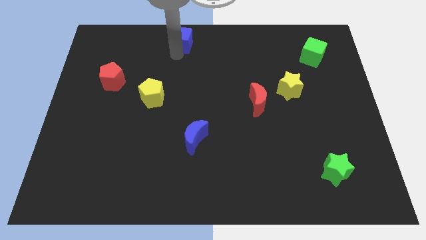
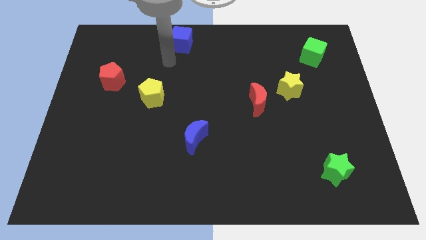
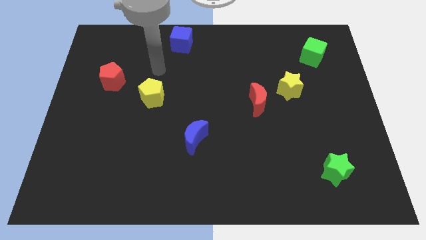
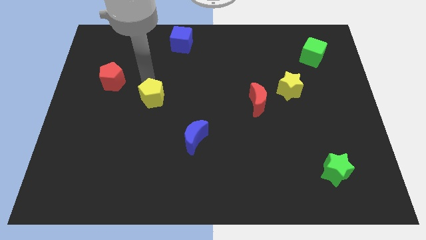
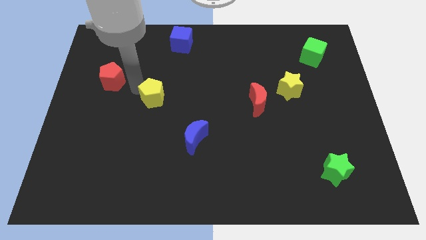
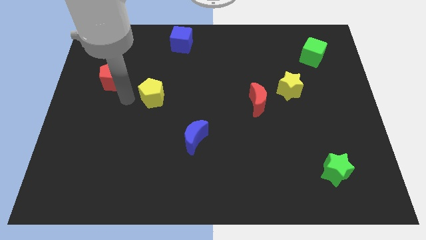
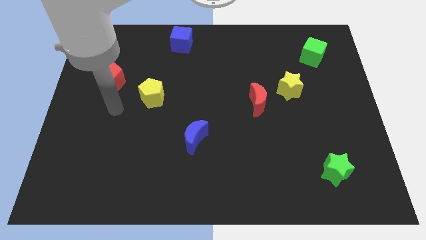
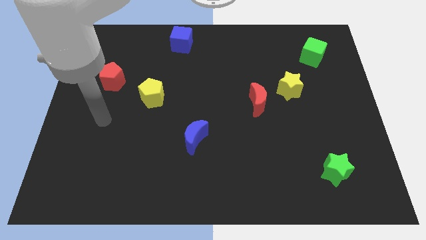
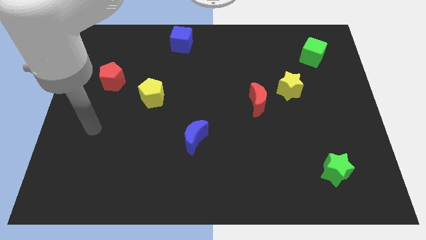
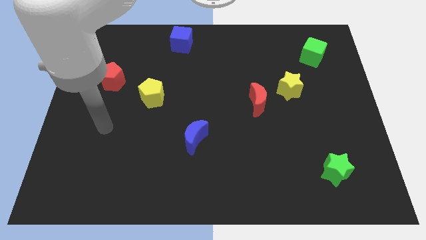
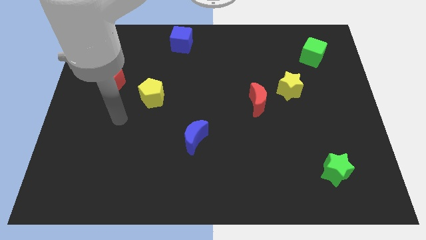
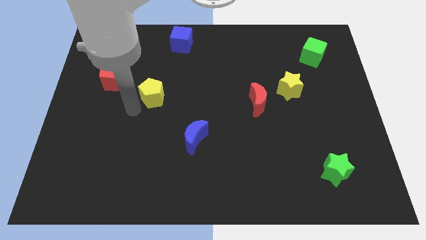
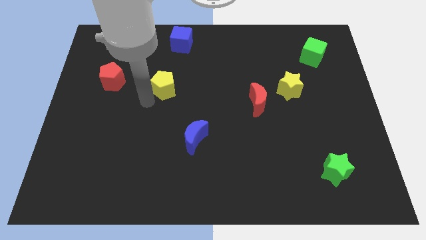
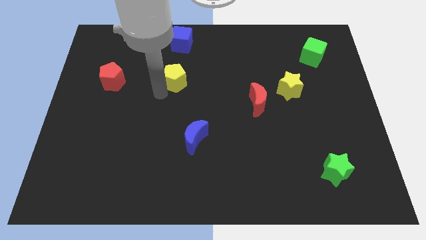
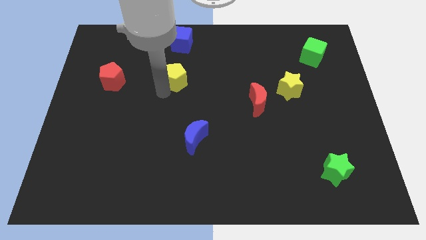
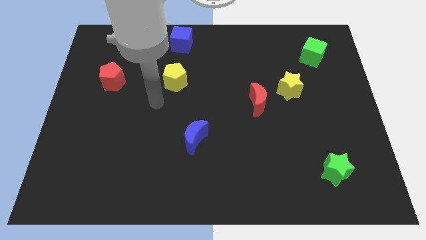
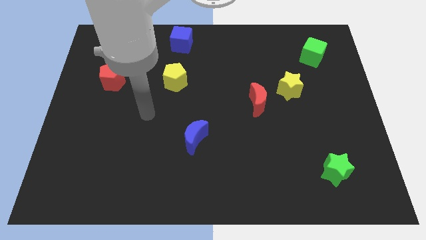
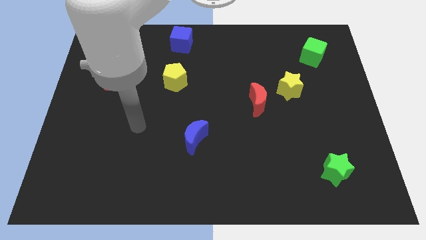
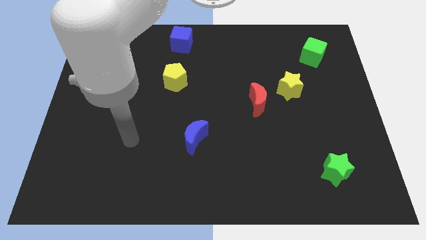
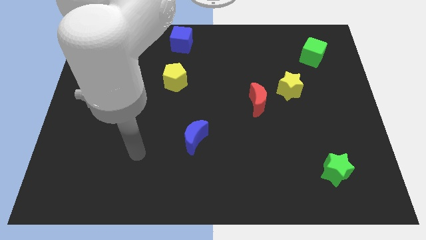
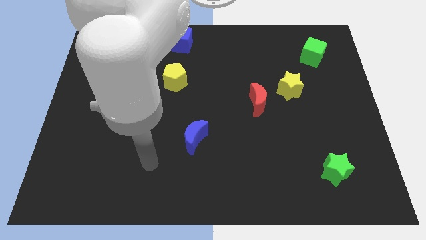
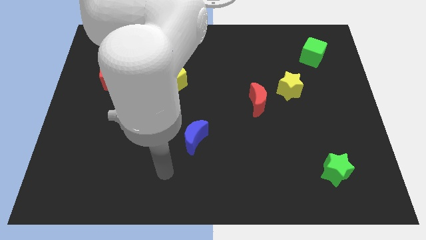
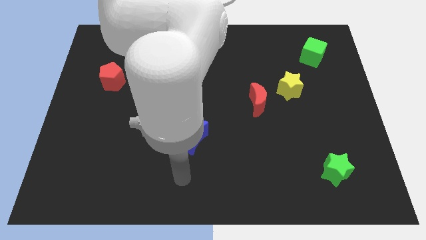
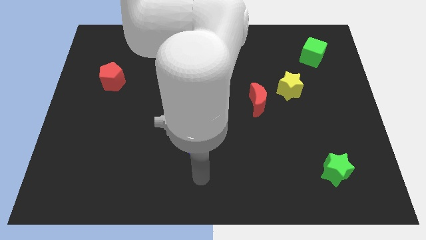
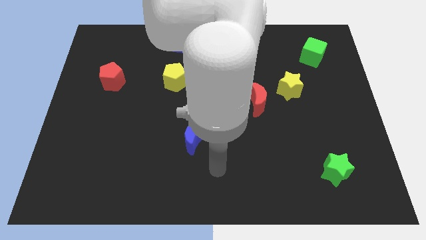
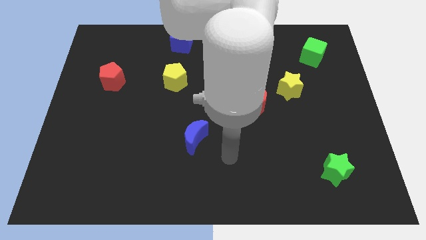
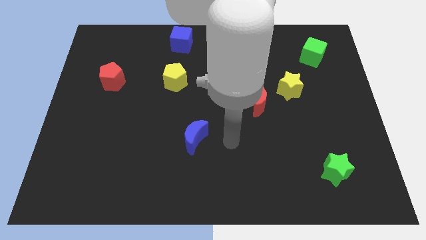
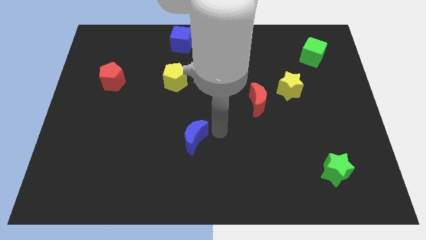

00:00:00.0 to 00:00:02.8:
place the yellow pentagon in between the red pentagon and yellow star

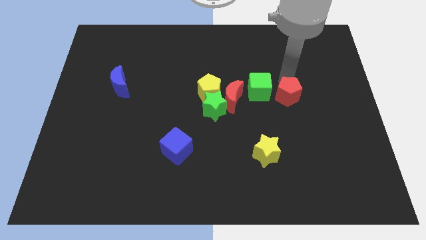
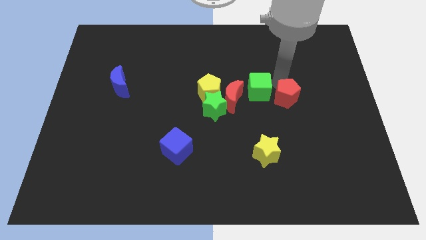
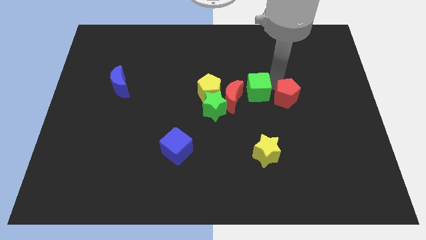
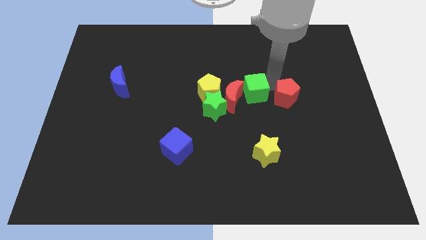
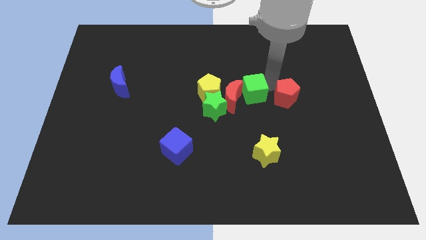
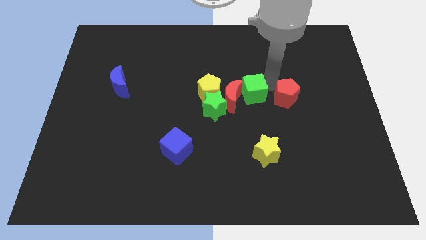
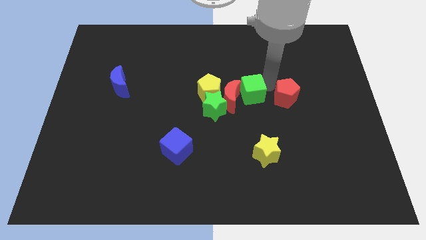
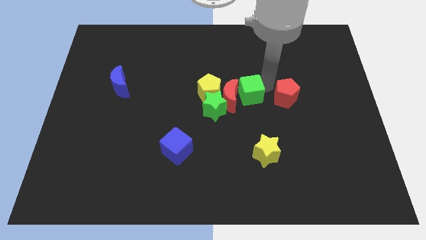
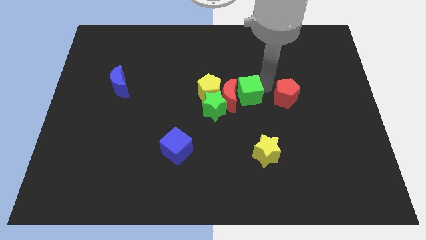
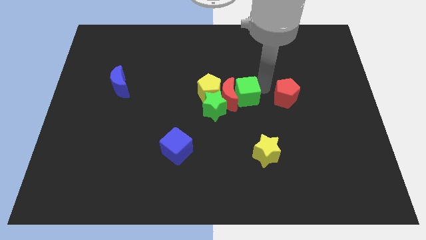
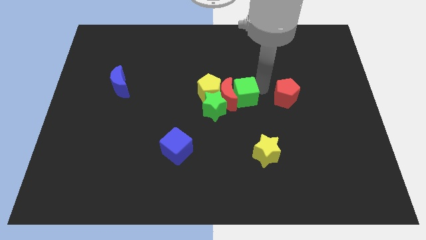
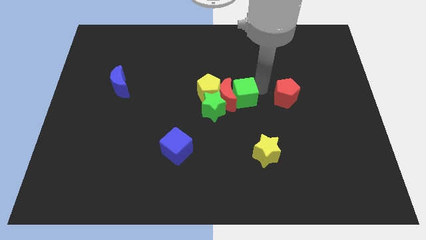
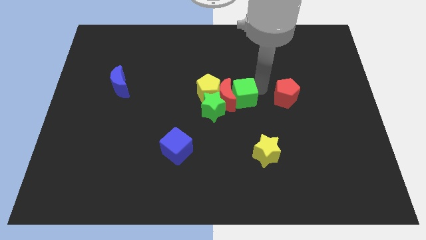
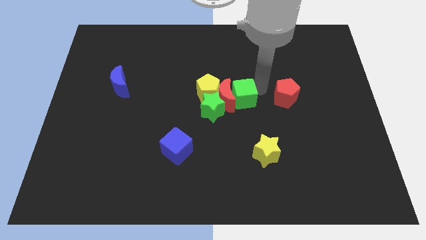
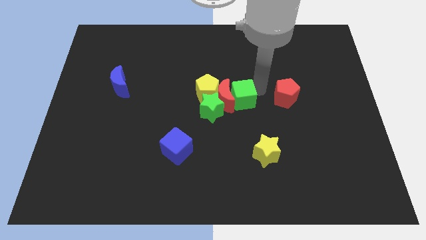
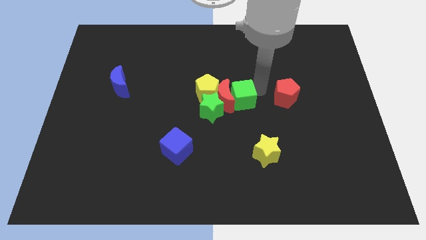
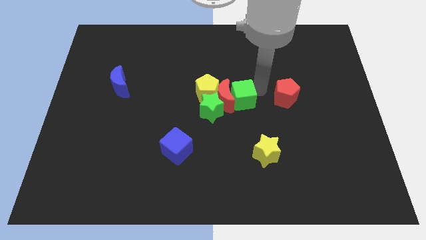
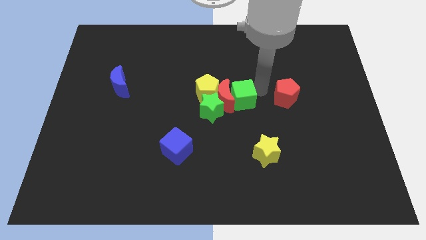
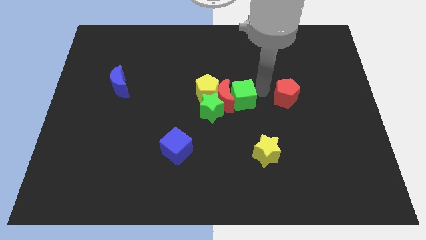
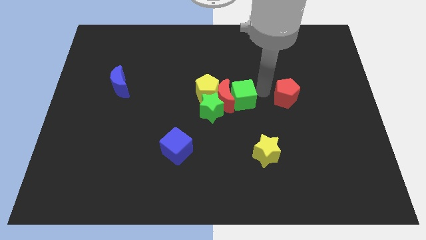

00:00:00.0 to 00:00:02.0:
push the green cube into the red crescent

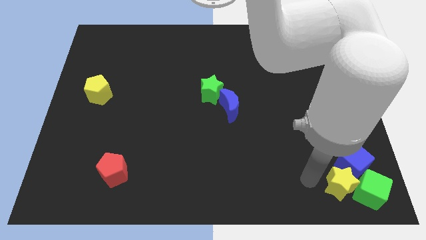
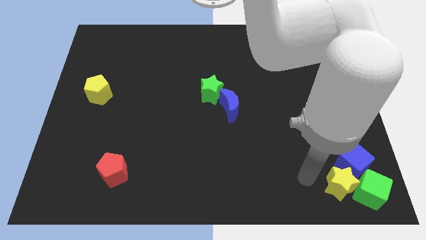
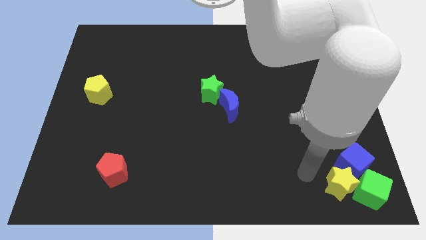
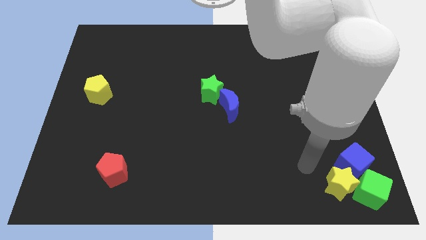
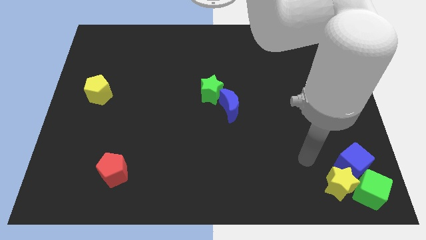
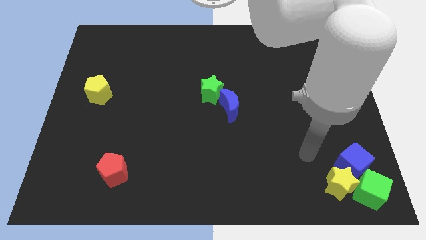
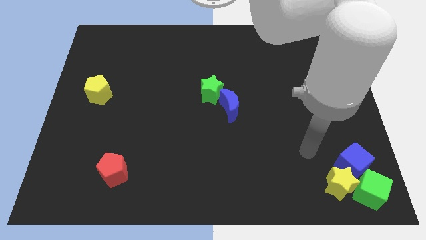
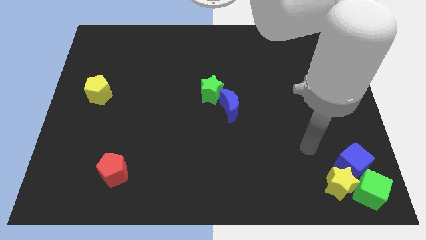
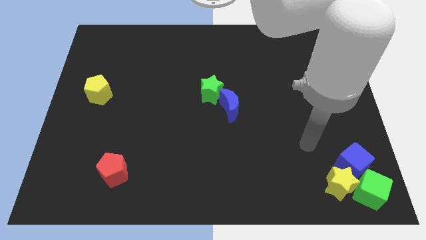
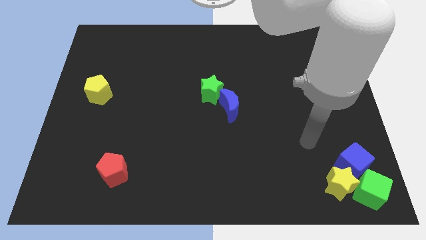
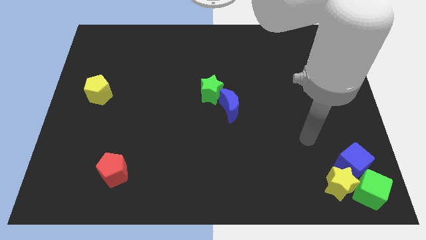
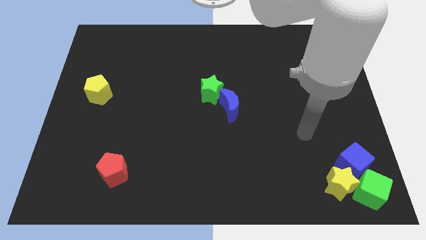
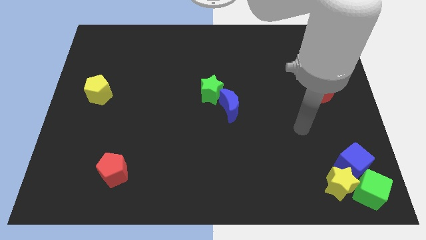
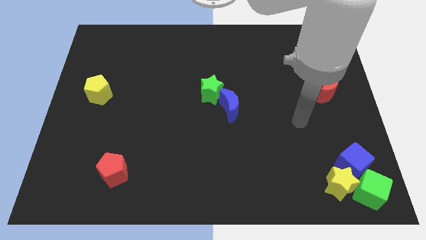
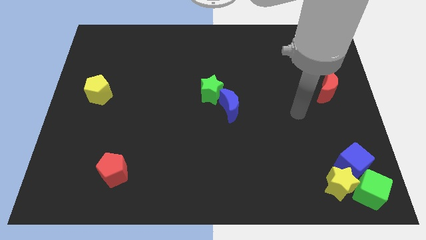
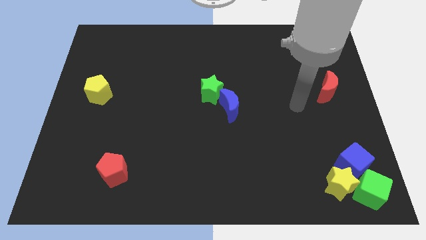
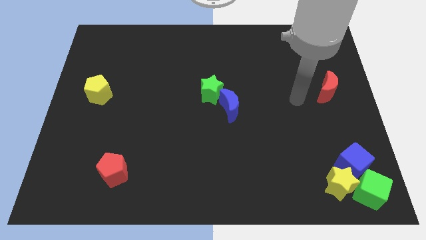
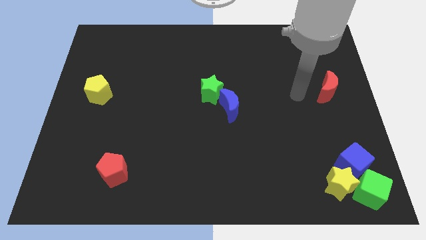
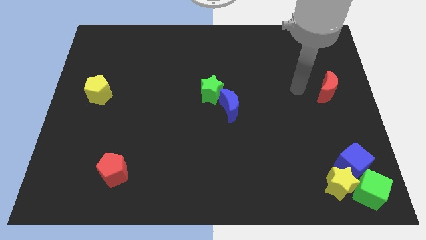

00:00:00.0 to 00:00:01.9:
move your arm away from the yellow star

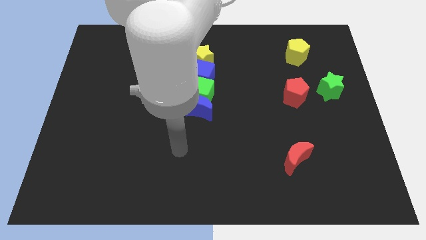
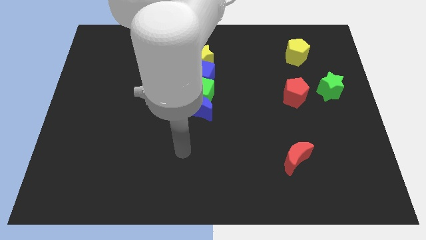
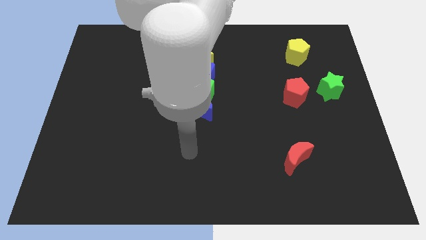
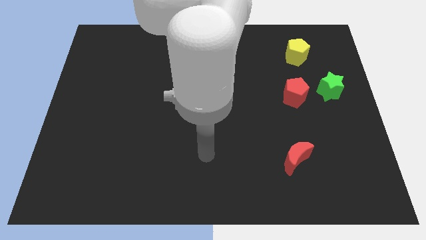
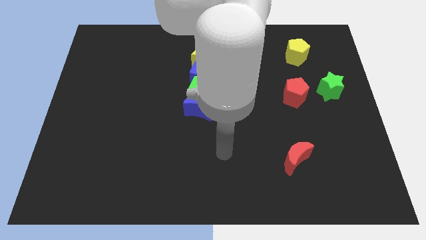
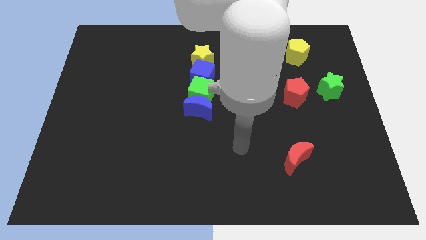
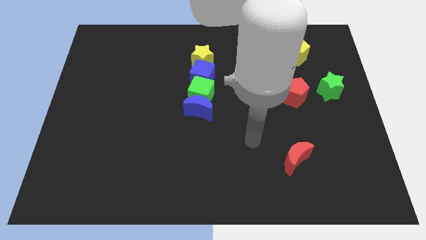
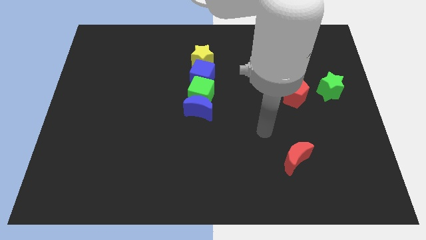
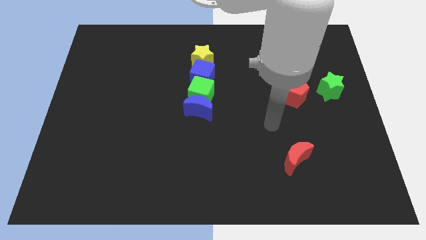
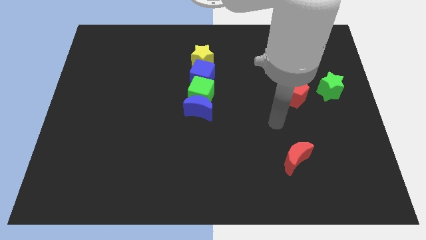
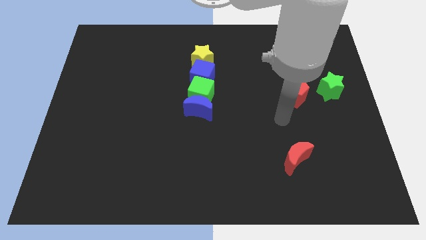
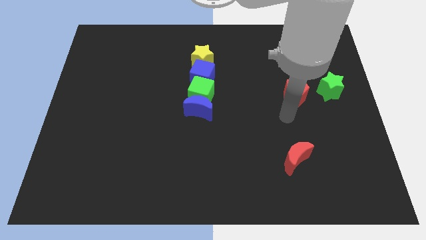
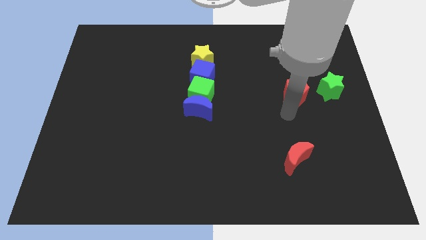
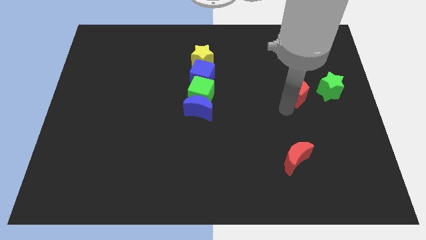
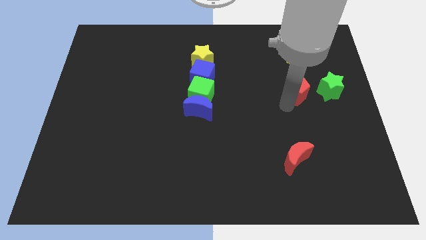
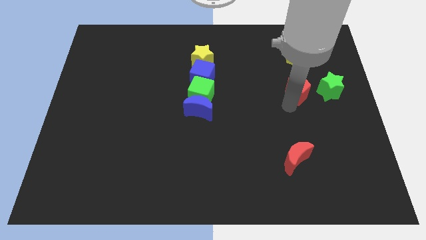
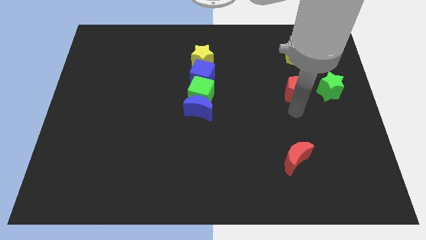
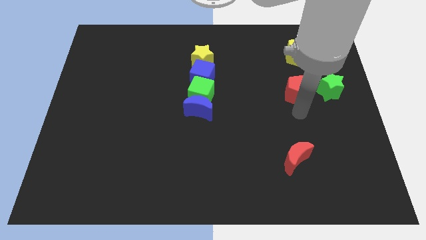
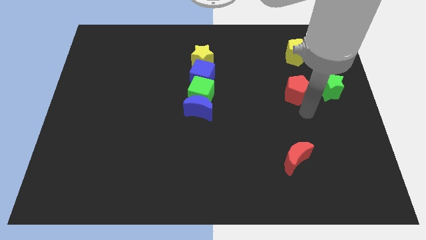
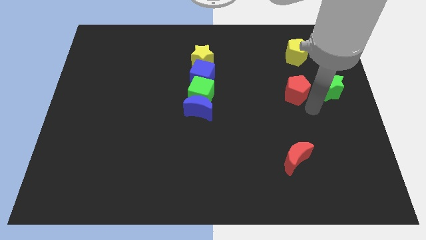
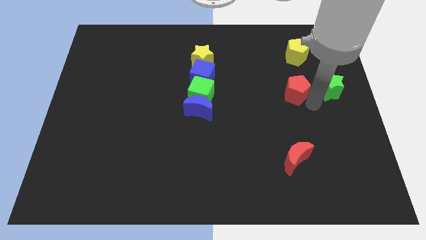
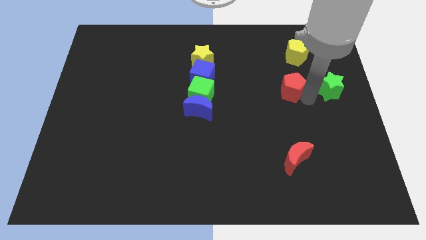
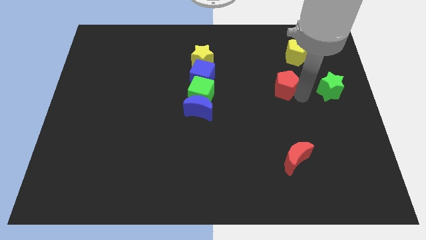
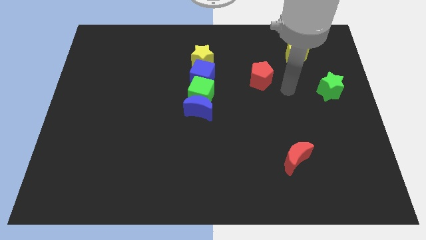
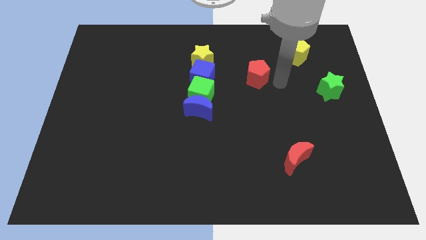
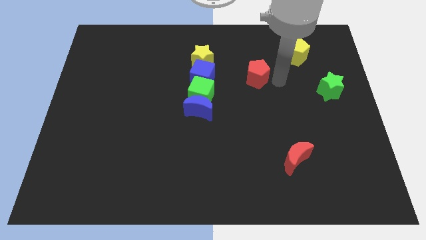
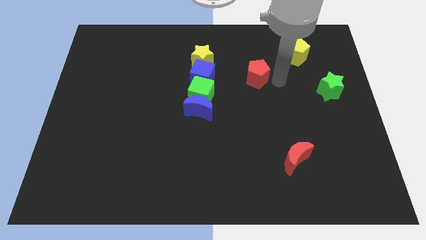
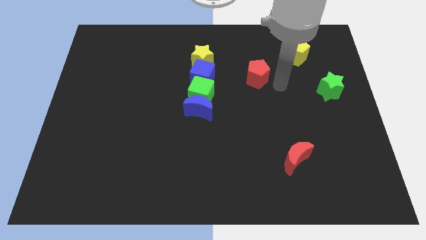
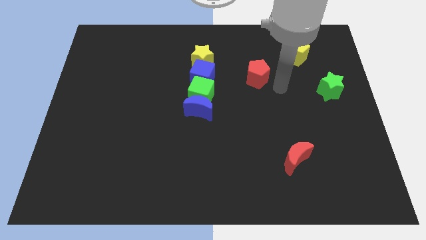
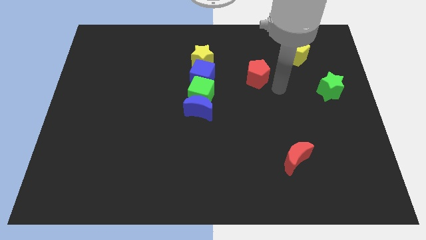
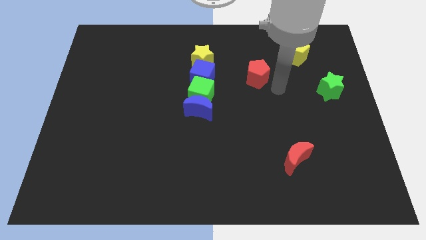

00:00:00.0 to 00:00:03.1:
place the red pentagon right to the blue cube
